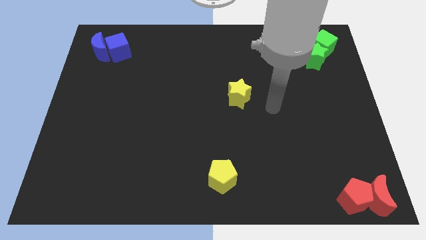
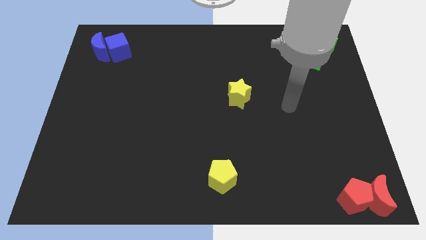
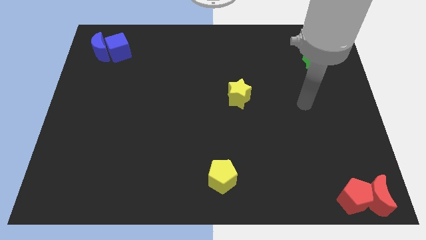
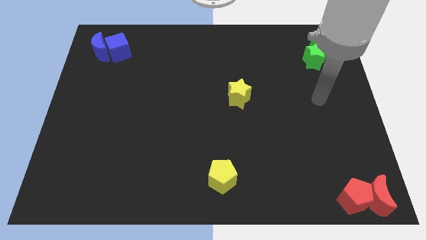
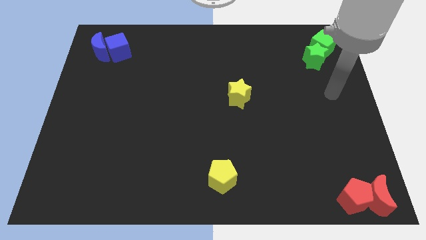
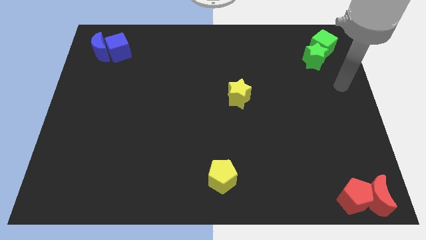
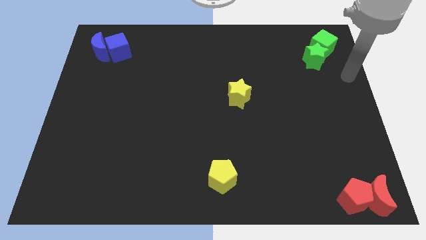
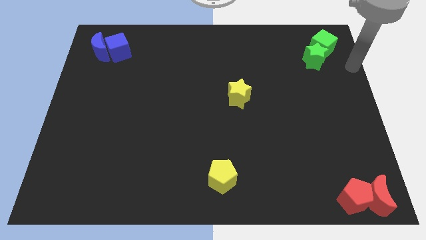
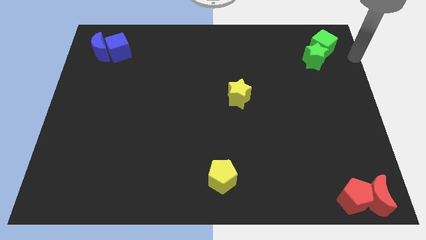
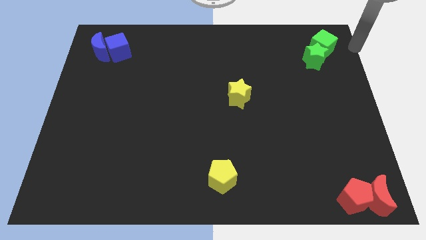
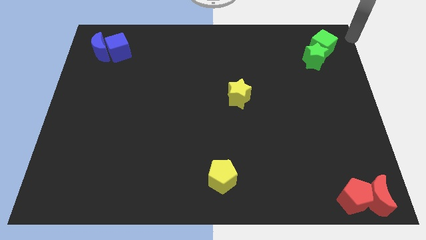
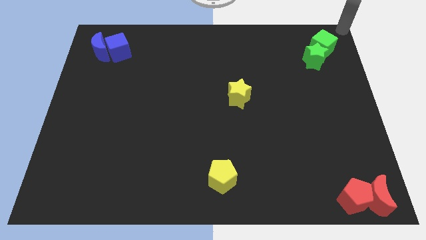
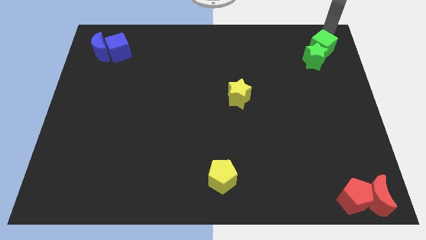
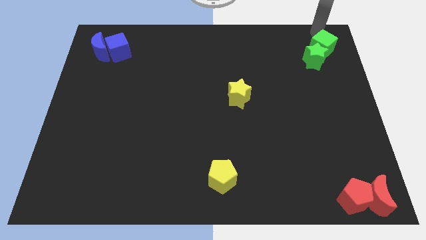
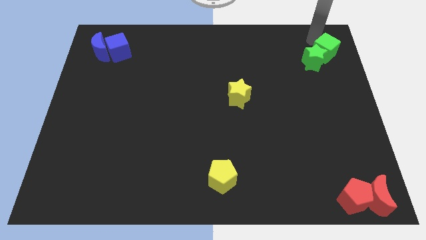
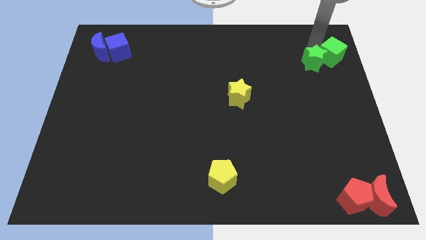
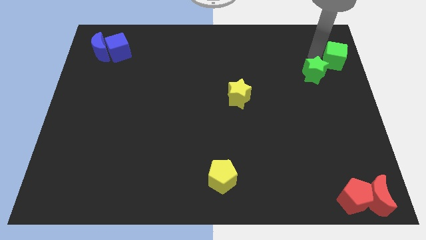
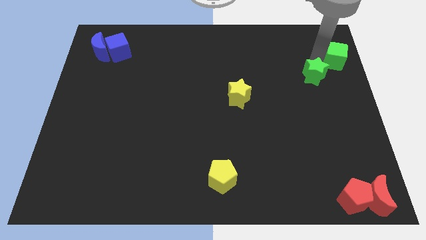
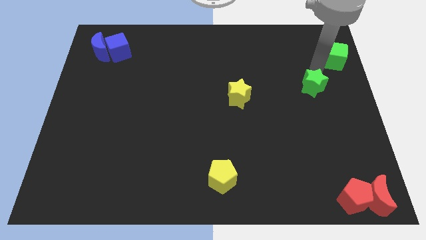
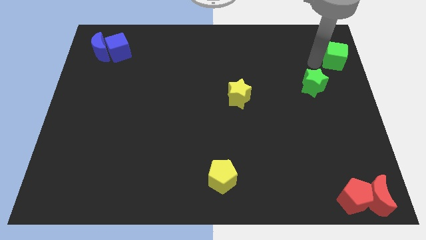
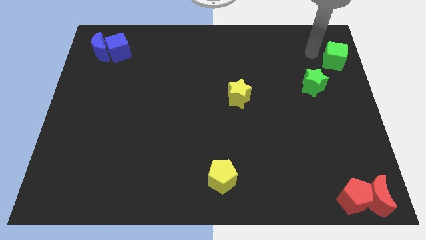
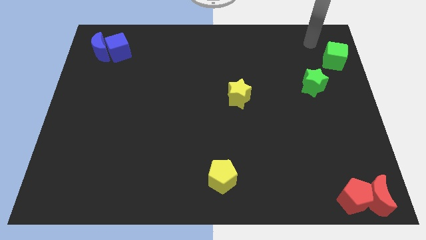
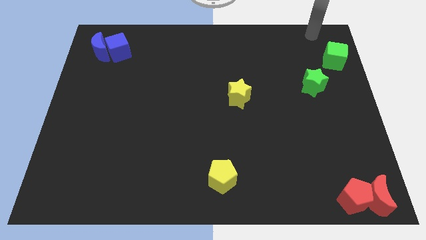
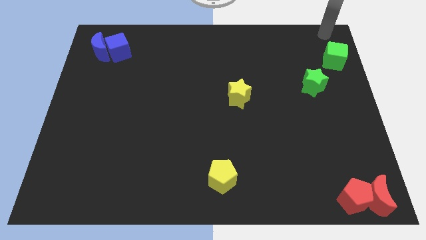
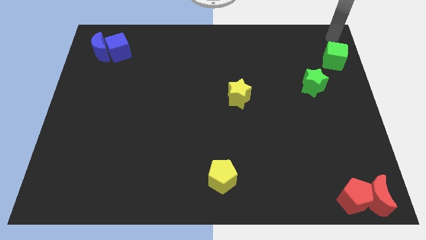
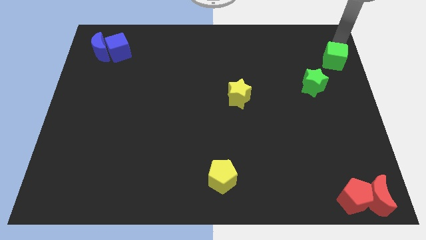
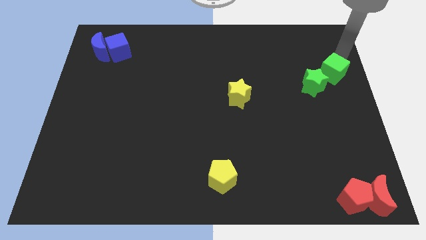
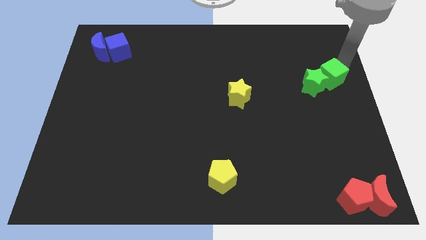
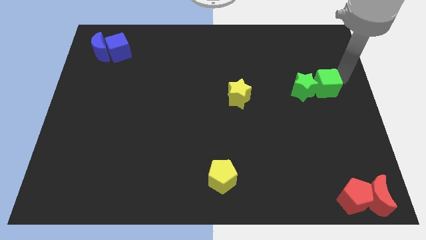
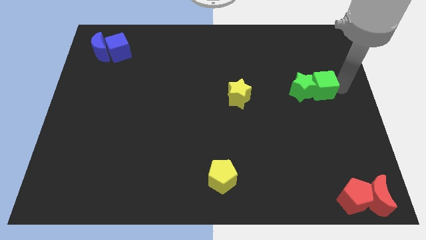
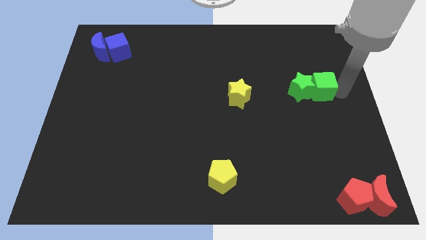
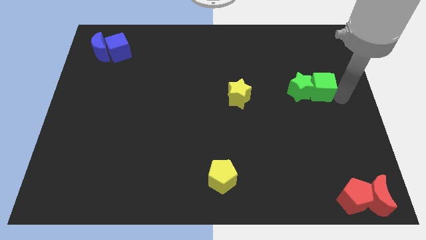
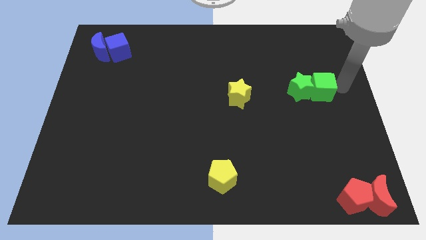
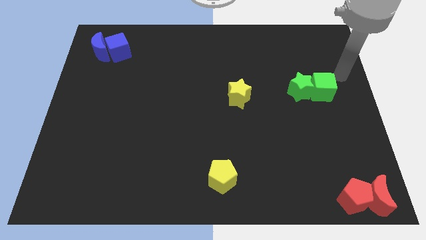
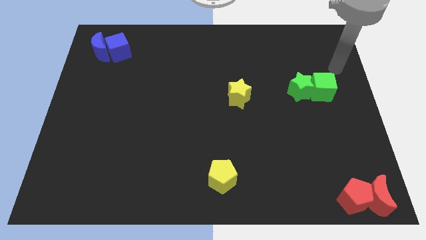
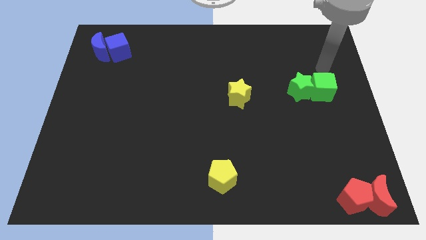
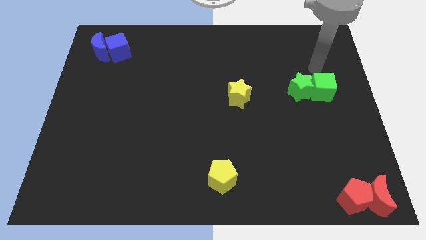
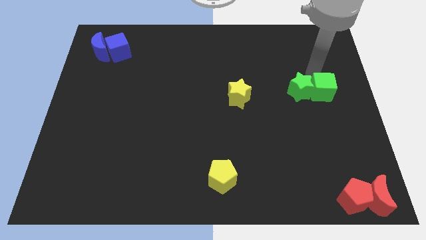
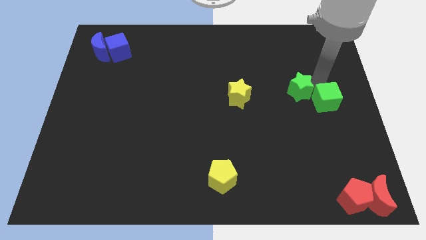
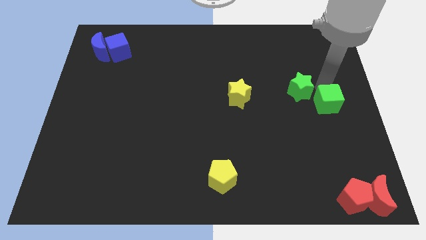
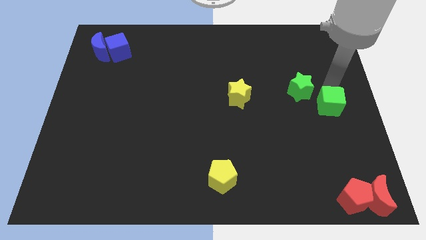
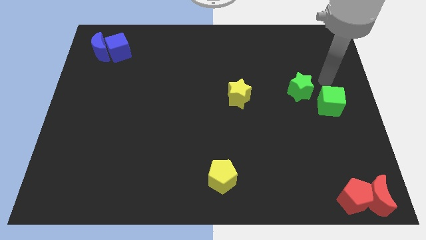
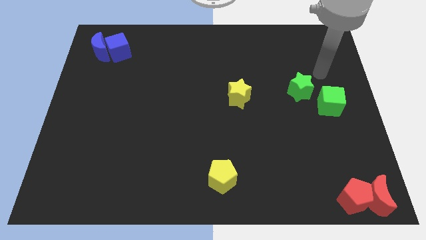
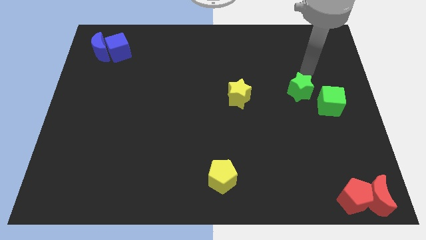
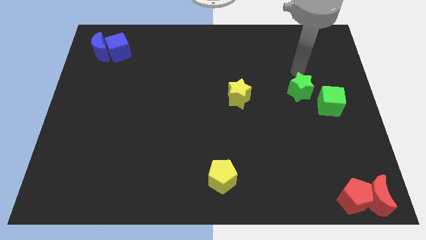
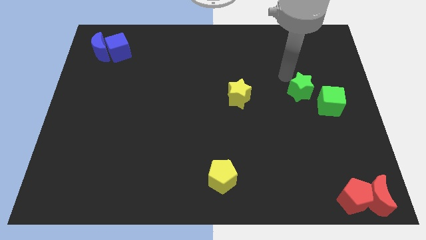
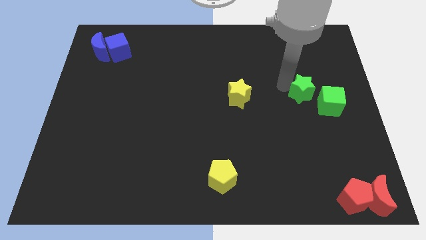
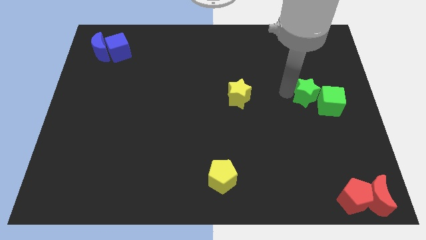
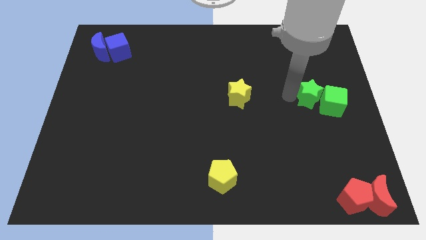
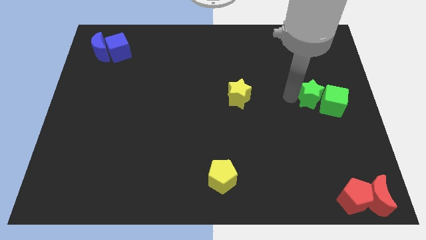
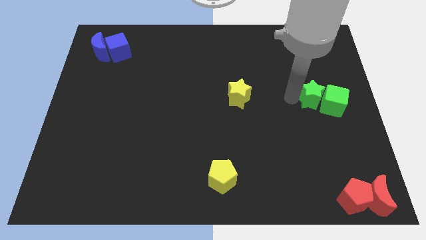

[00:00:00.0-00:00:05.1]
push the green blocks to the bottom of the board

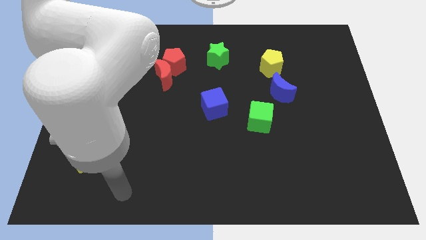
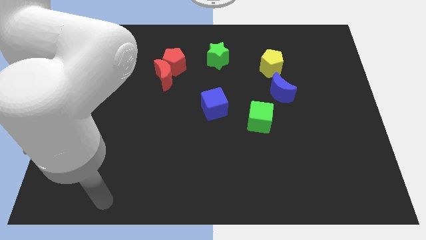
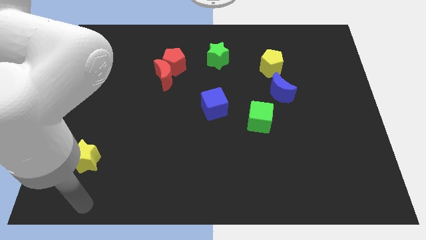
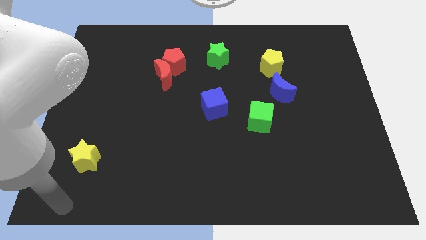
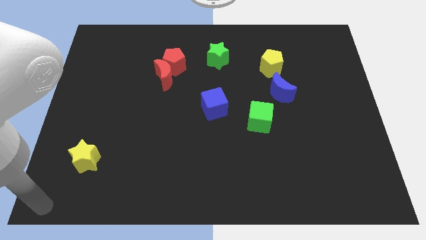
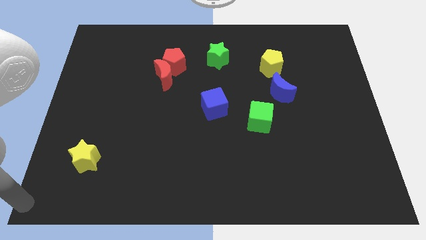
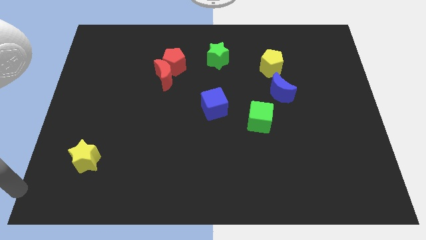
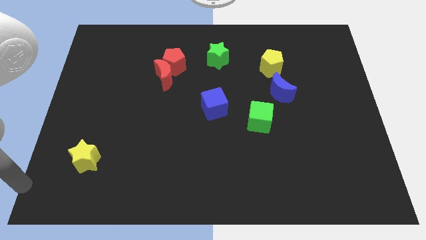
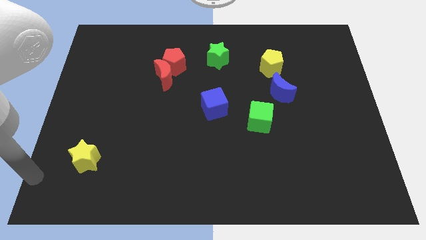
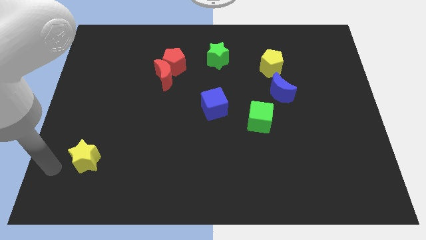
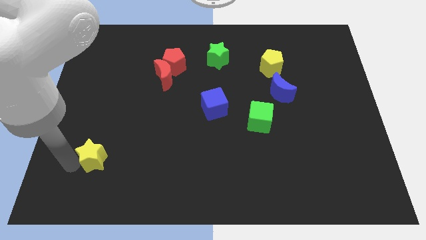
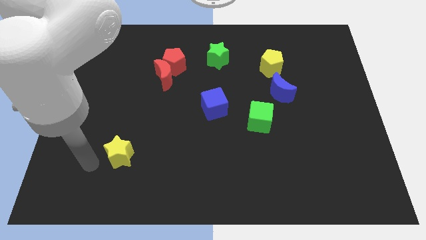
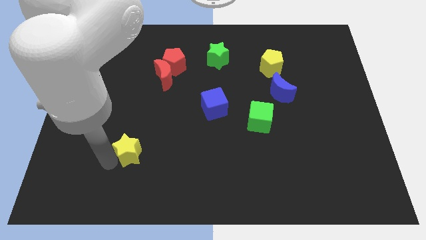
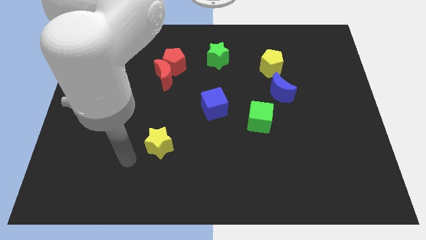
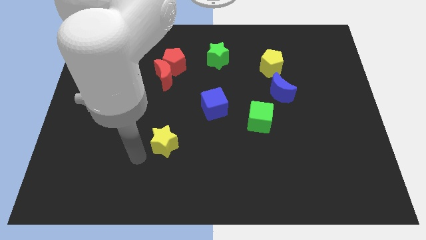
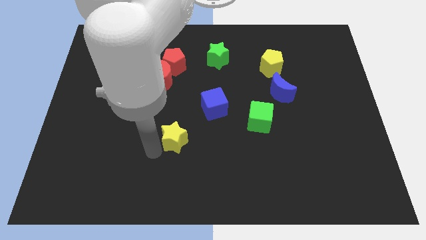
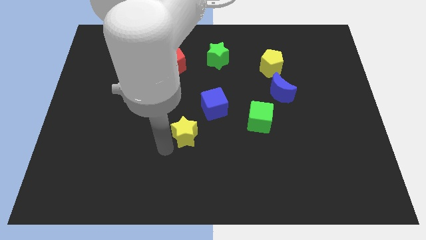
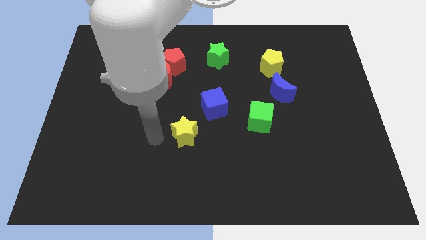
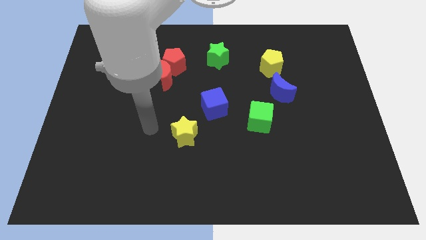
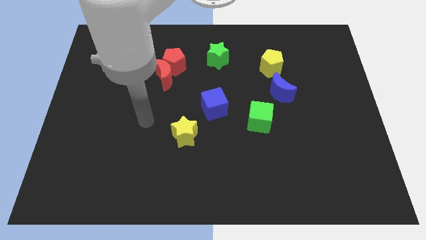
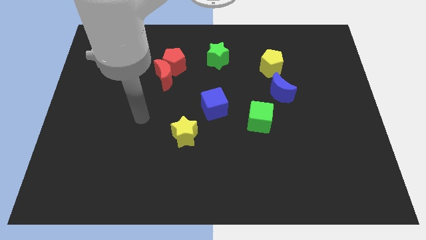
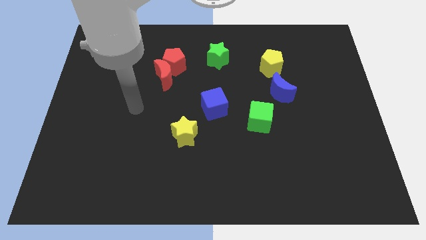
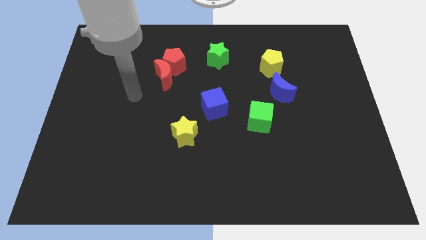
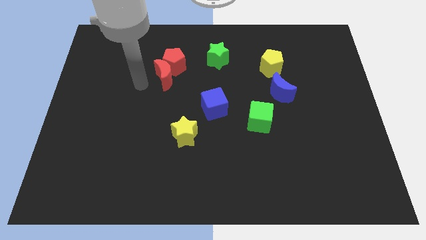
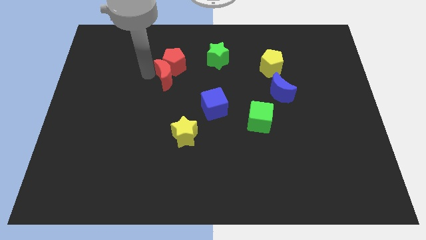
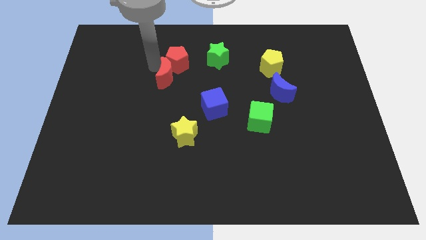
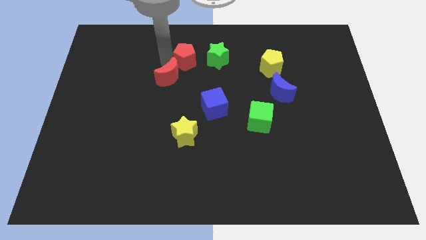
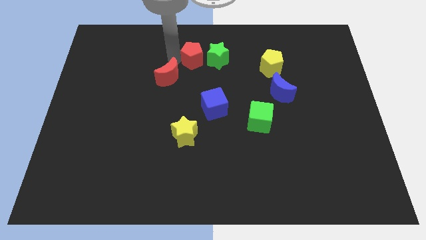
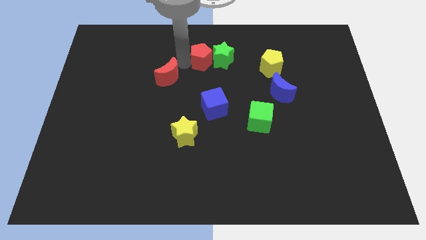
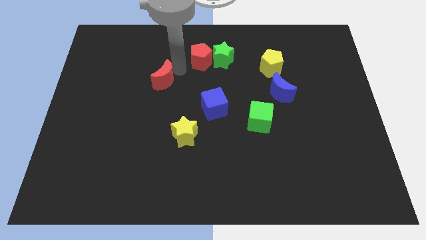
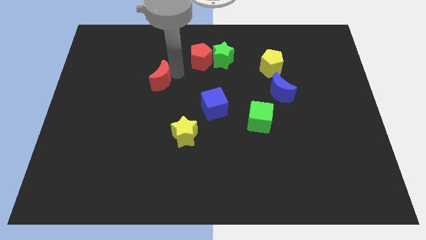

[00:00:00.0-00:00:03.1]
separate the red moon and red pentagon

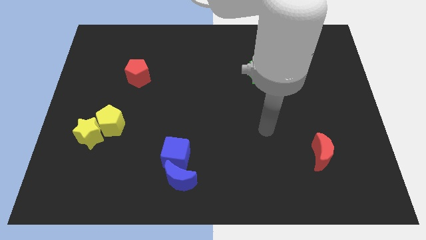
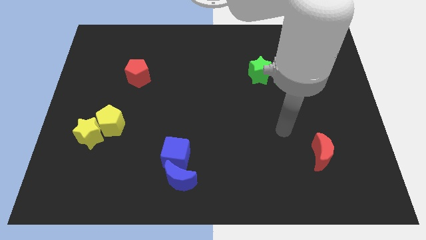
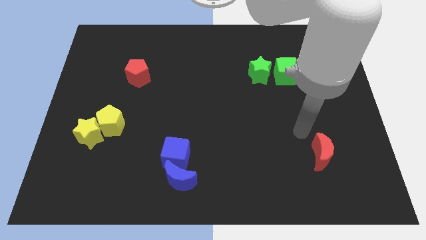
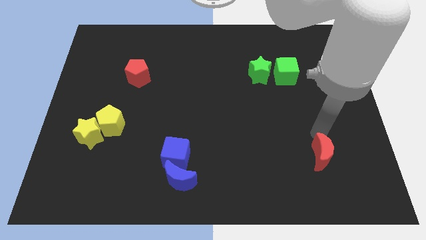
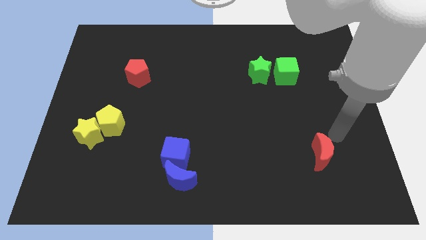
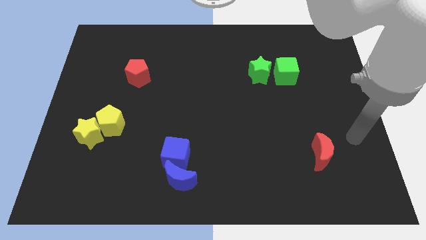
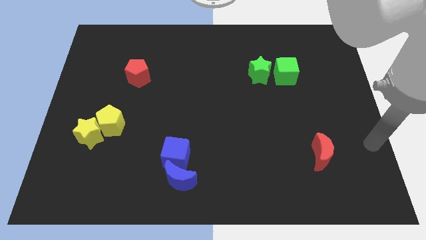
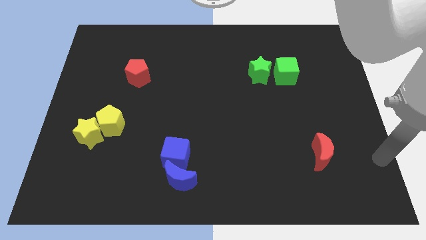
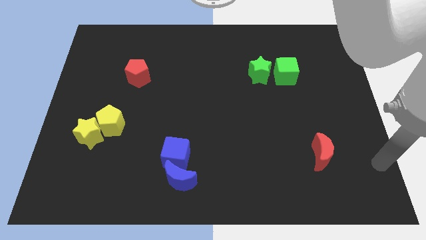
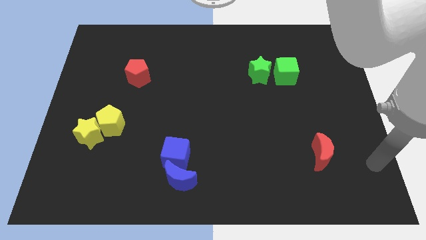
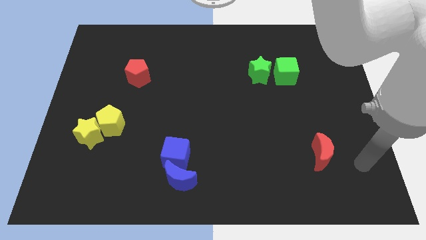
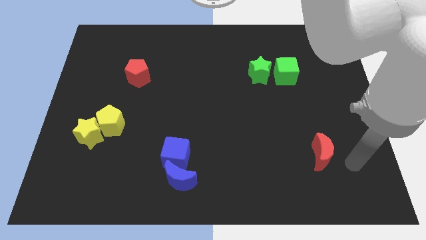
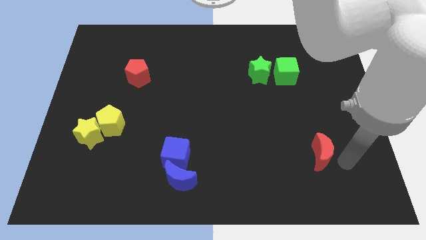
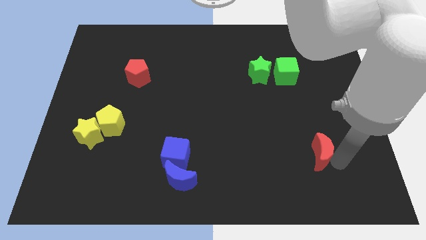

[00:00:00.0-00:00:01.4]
place your arm to the right of red moon
